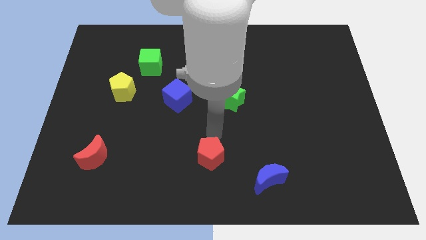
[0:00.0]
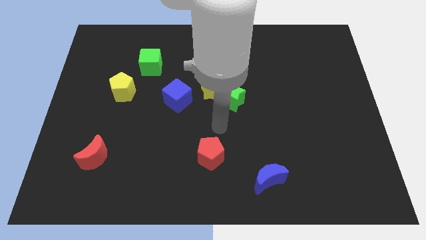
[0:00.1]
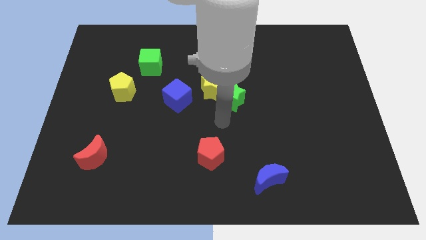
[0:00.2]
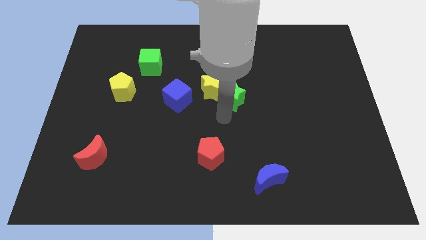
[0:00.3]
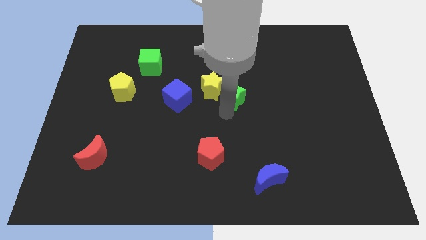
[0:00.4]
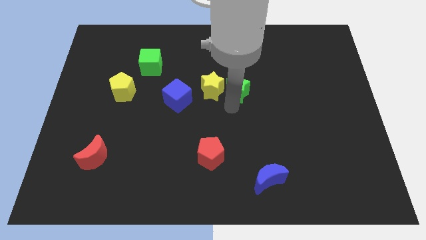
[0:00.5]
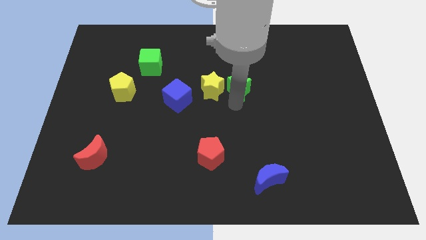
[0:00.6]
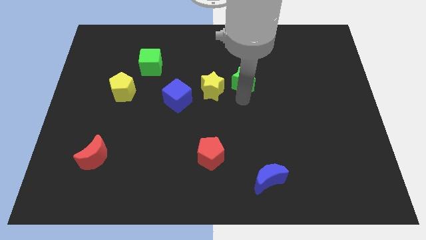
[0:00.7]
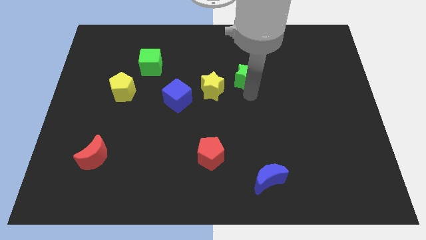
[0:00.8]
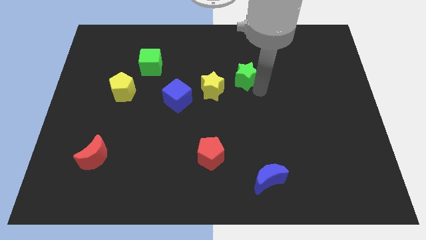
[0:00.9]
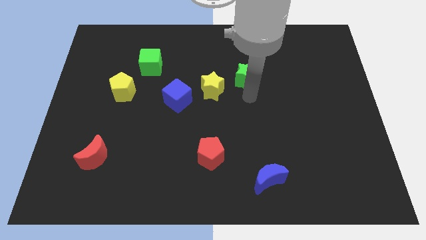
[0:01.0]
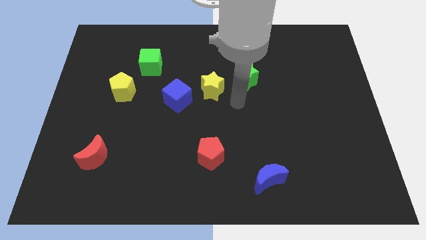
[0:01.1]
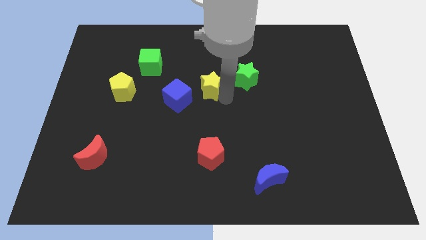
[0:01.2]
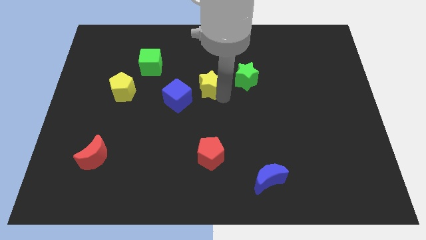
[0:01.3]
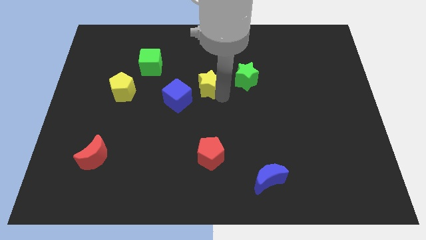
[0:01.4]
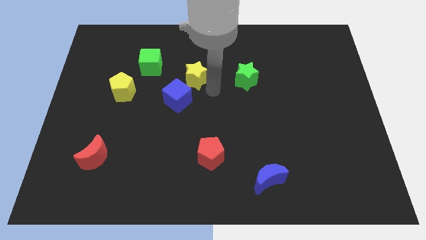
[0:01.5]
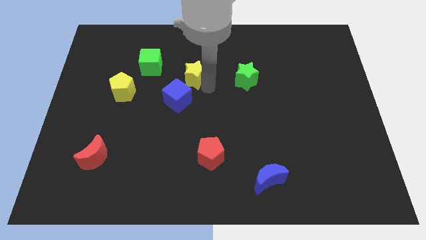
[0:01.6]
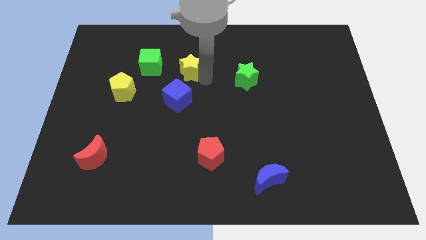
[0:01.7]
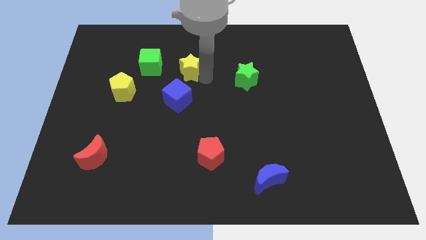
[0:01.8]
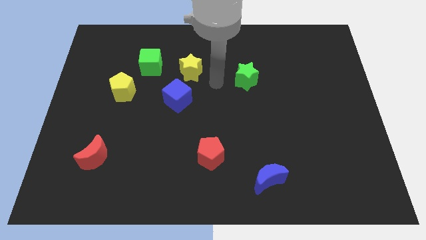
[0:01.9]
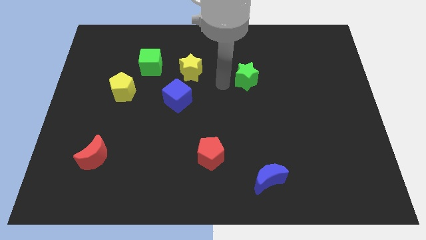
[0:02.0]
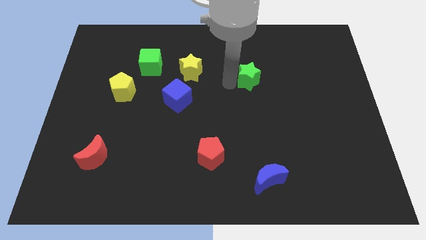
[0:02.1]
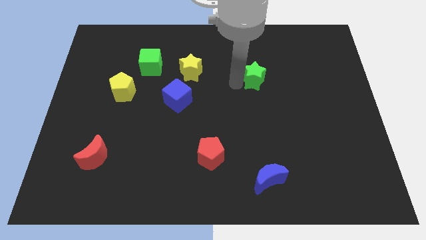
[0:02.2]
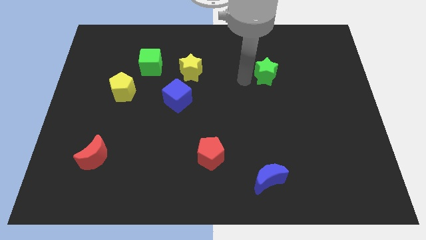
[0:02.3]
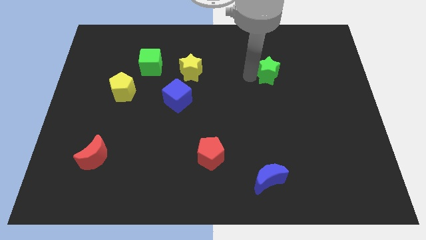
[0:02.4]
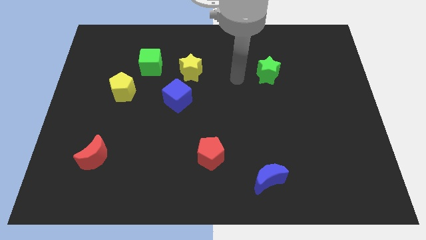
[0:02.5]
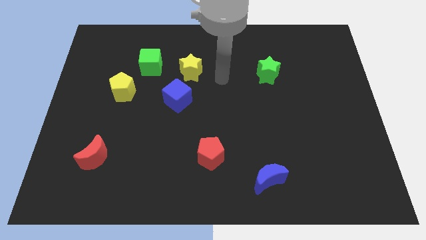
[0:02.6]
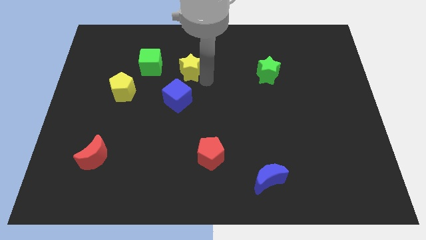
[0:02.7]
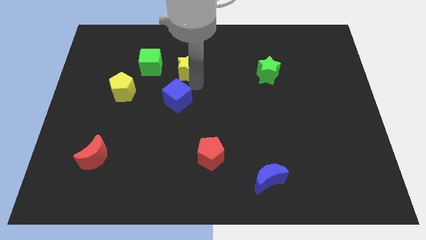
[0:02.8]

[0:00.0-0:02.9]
separate the green star and the yellow star

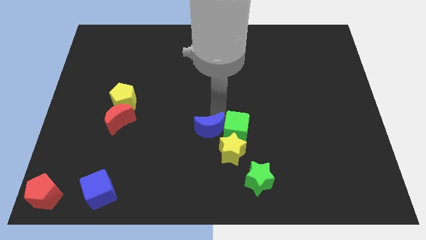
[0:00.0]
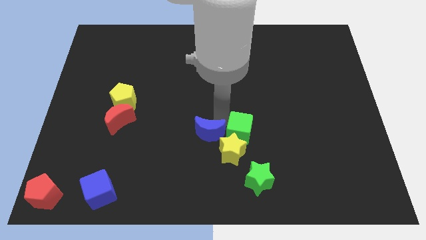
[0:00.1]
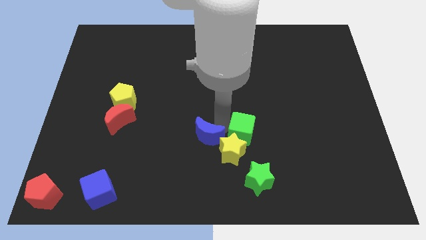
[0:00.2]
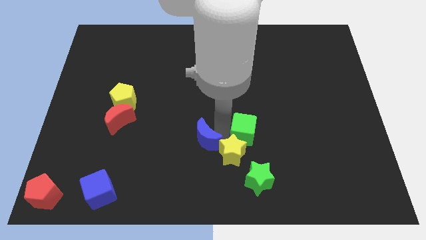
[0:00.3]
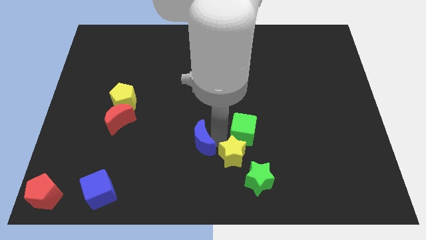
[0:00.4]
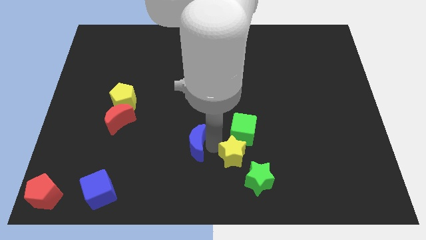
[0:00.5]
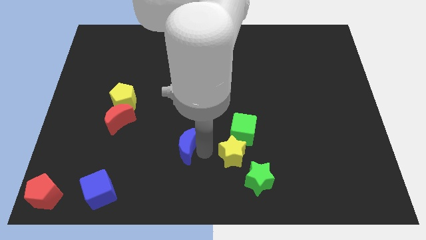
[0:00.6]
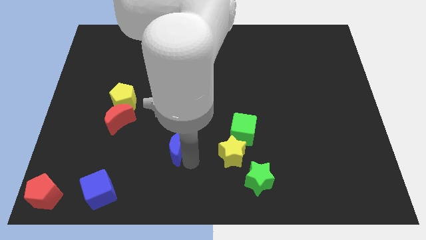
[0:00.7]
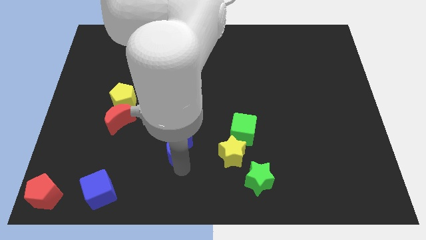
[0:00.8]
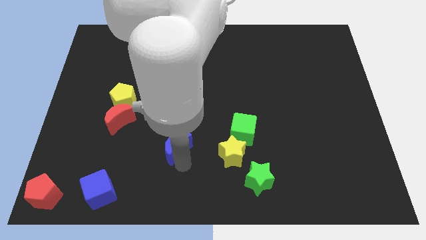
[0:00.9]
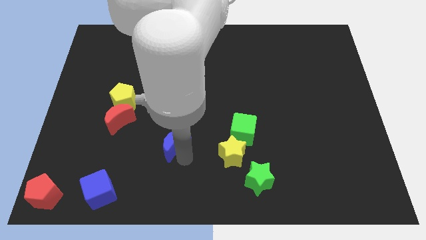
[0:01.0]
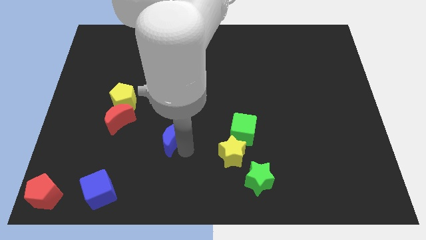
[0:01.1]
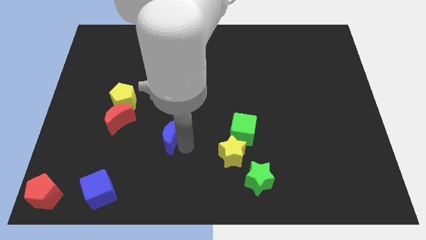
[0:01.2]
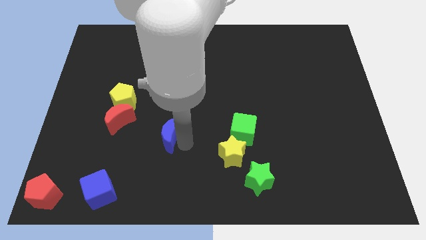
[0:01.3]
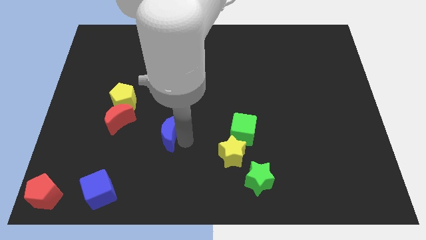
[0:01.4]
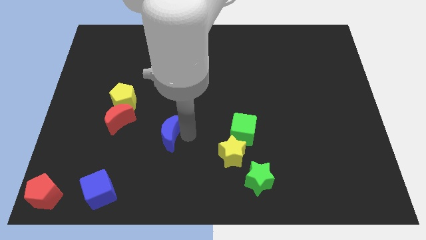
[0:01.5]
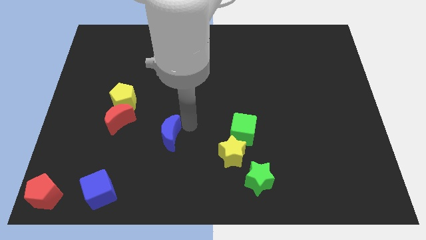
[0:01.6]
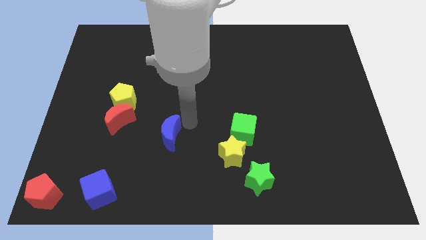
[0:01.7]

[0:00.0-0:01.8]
separate blue moon and green cube

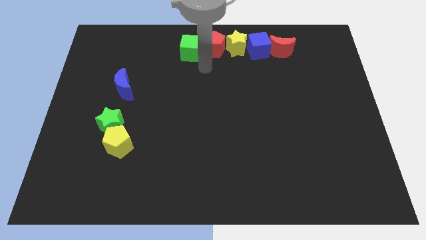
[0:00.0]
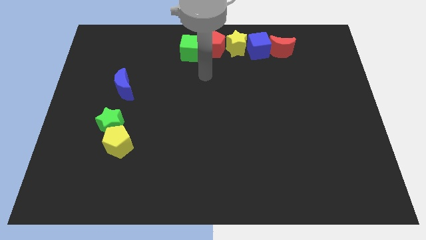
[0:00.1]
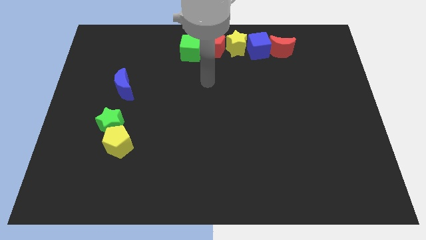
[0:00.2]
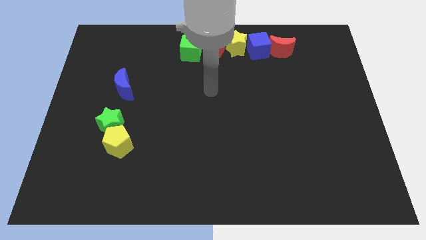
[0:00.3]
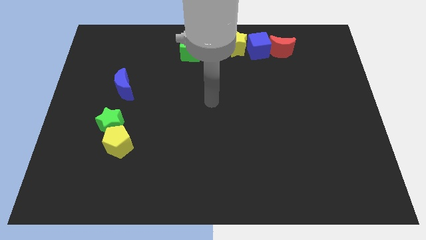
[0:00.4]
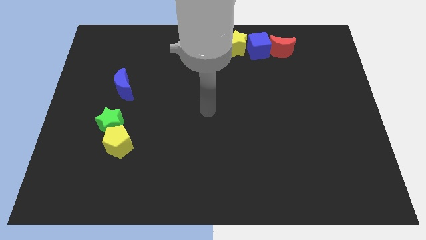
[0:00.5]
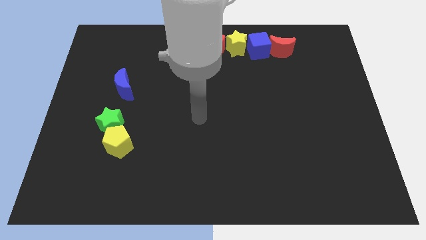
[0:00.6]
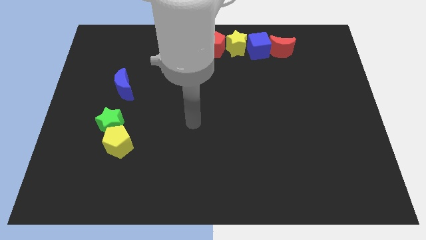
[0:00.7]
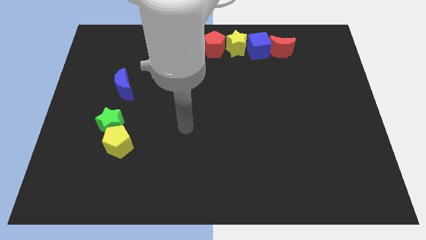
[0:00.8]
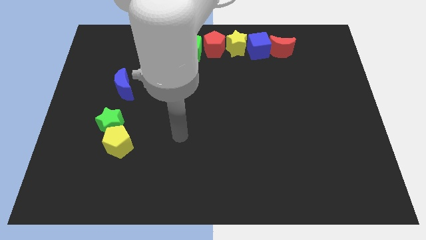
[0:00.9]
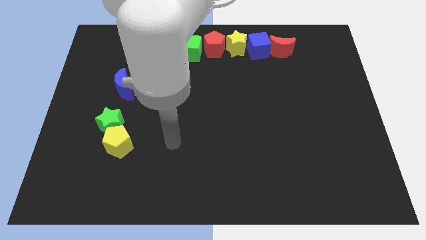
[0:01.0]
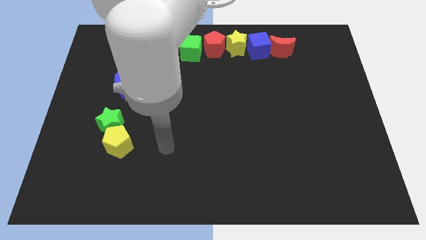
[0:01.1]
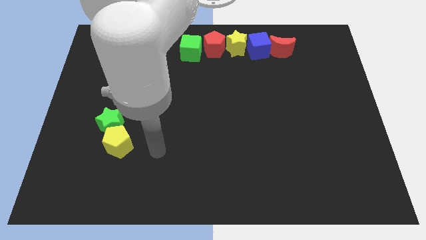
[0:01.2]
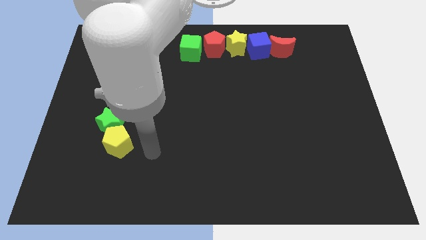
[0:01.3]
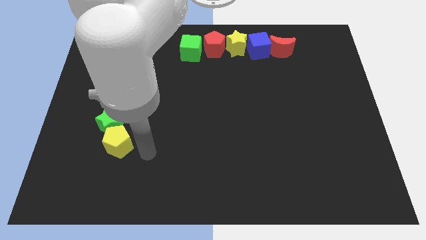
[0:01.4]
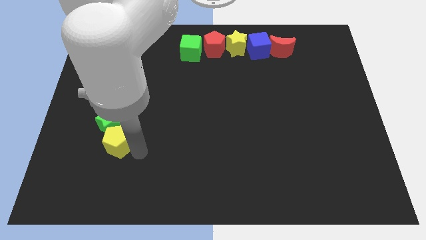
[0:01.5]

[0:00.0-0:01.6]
move your arm to the right of the yellow pentagon

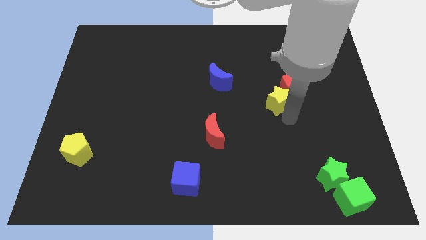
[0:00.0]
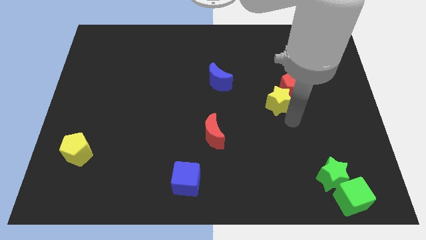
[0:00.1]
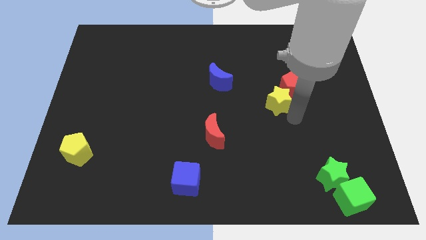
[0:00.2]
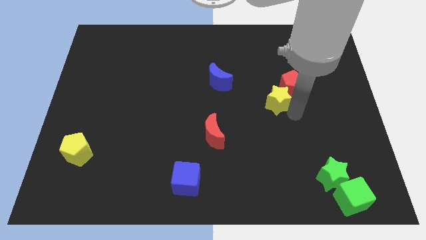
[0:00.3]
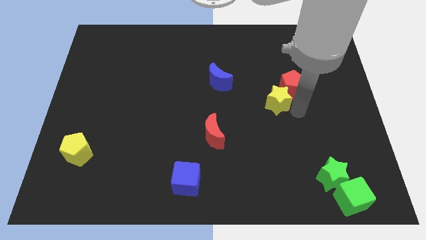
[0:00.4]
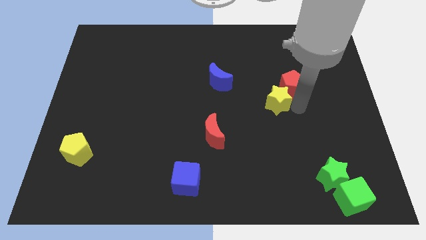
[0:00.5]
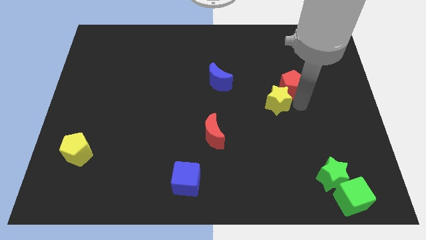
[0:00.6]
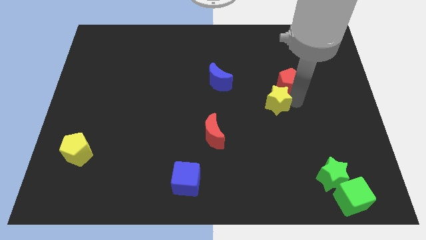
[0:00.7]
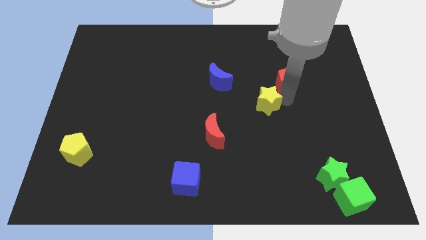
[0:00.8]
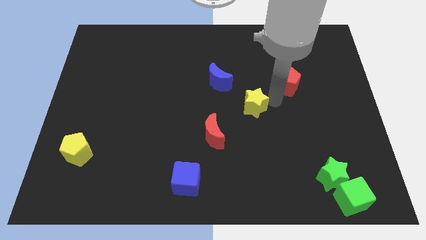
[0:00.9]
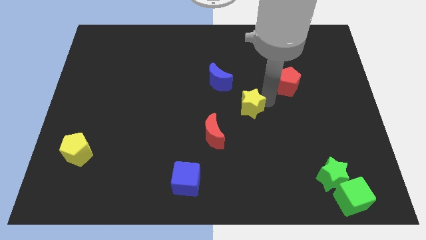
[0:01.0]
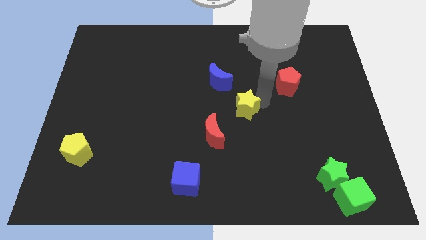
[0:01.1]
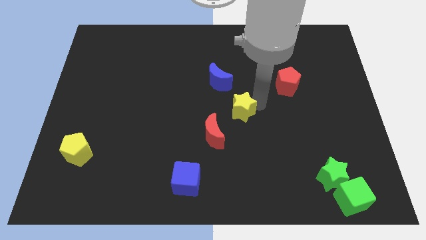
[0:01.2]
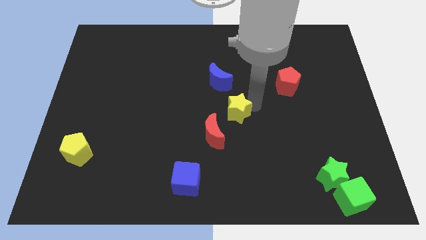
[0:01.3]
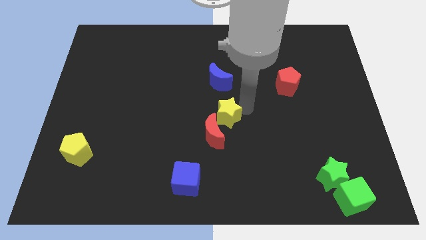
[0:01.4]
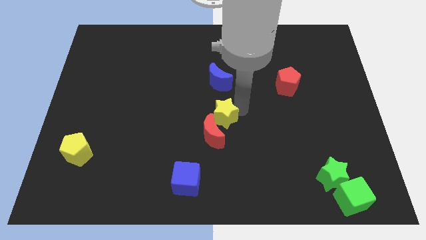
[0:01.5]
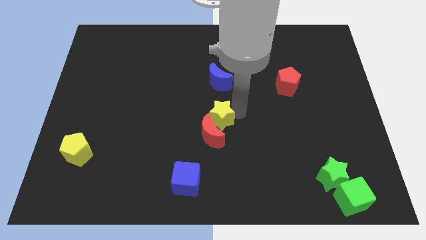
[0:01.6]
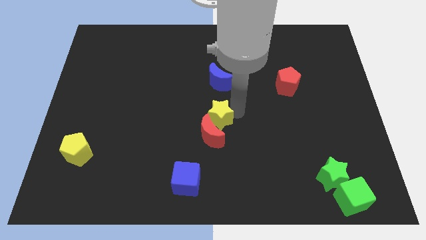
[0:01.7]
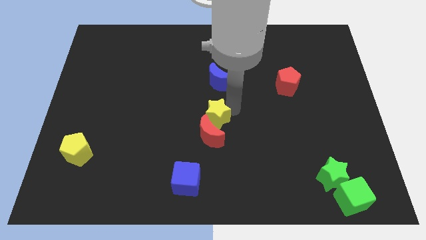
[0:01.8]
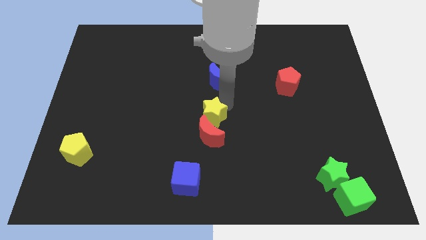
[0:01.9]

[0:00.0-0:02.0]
move the yellow star to the bottom of the blue crescent

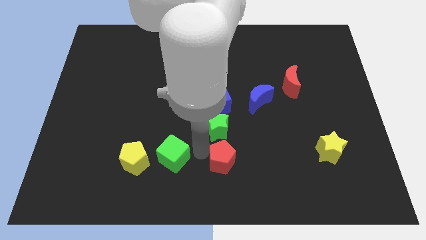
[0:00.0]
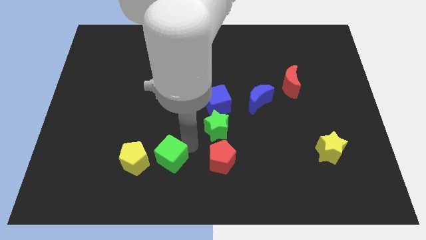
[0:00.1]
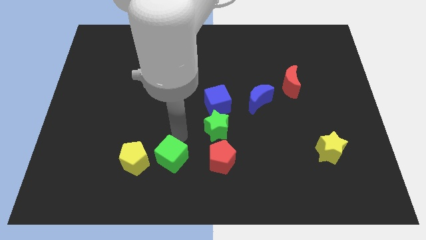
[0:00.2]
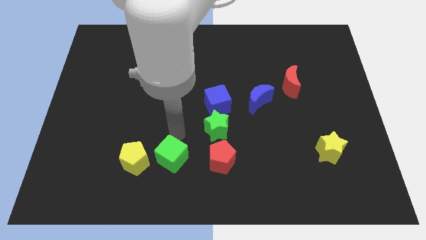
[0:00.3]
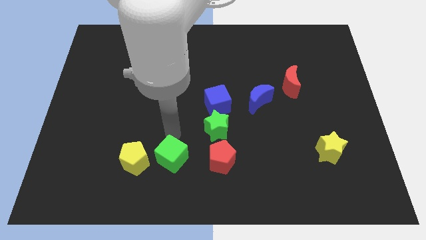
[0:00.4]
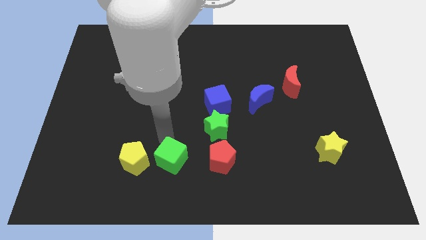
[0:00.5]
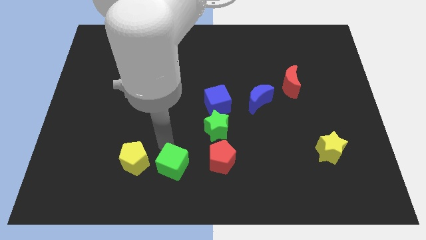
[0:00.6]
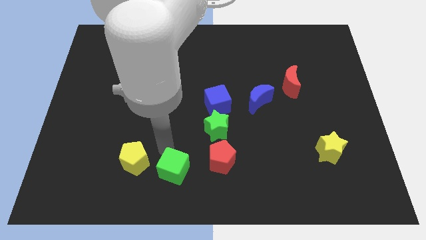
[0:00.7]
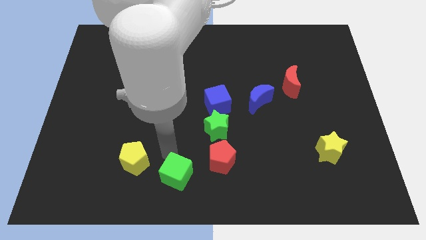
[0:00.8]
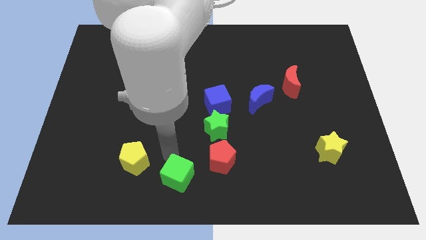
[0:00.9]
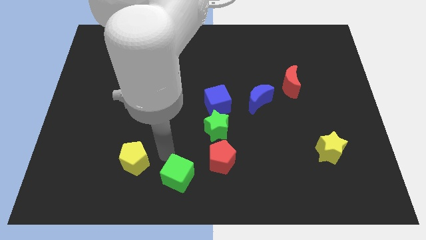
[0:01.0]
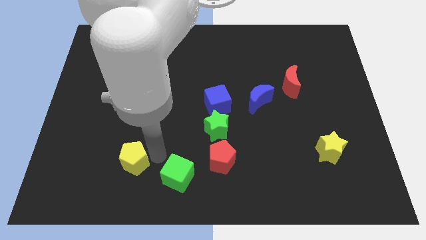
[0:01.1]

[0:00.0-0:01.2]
place green cube in between red and yellow pentagons
